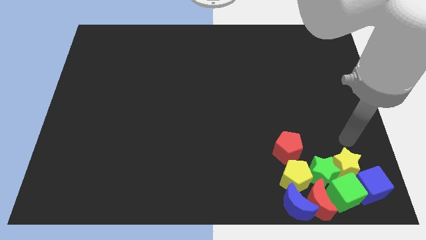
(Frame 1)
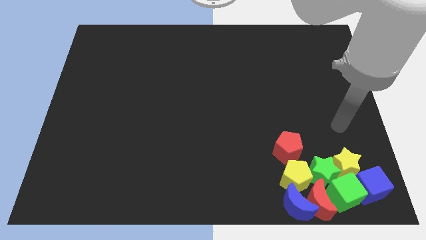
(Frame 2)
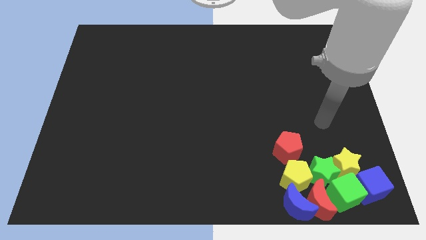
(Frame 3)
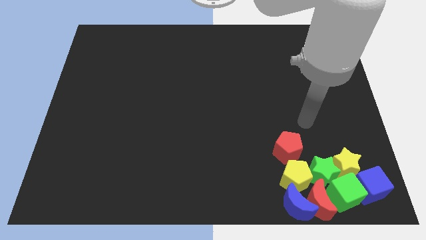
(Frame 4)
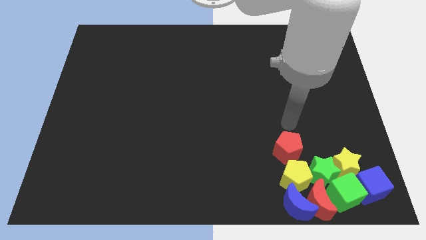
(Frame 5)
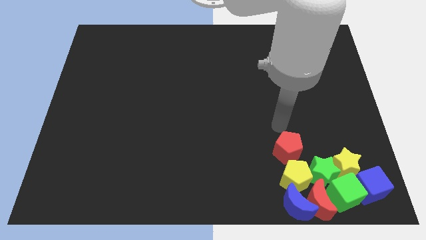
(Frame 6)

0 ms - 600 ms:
point your arm at the top of the red pentagon

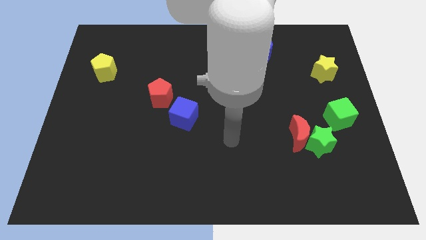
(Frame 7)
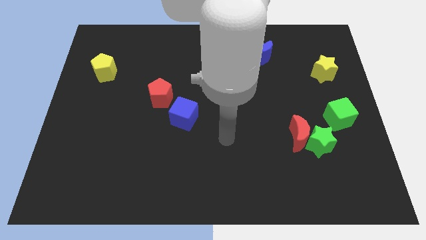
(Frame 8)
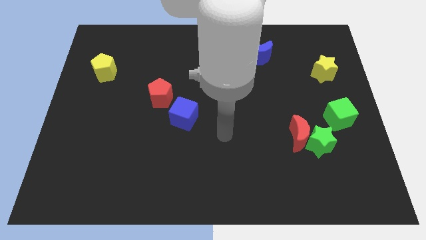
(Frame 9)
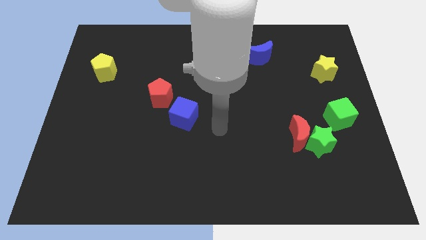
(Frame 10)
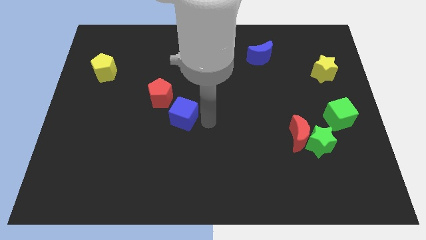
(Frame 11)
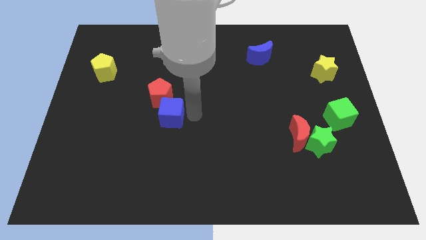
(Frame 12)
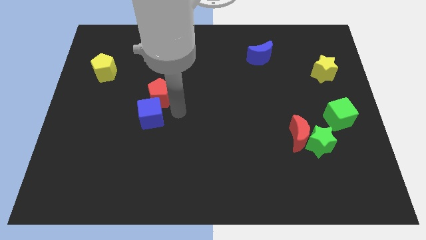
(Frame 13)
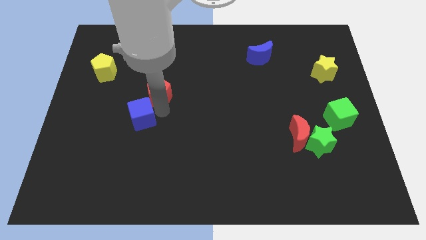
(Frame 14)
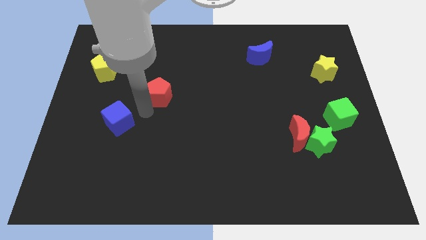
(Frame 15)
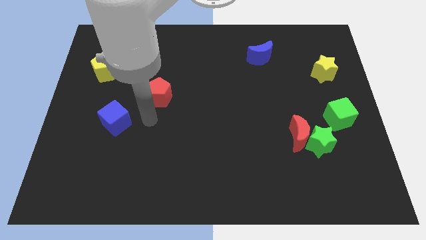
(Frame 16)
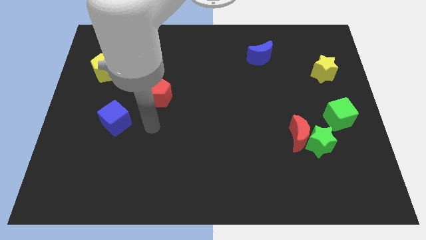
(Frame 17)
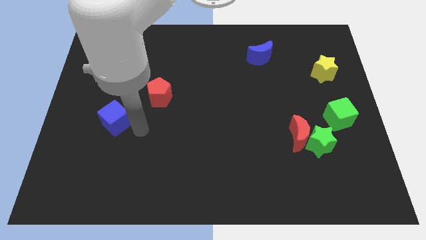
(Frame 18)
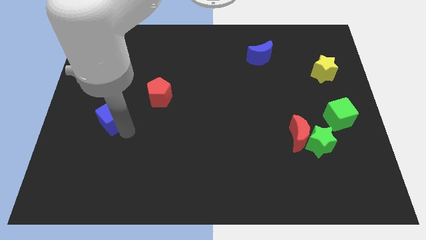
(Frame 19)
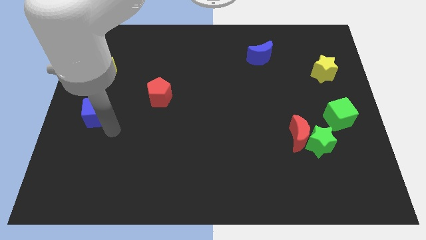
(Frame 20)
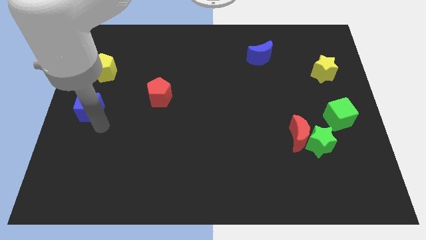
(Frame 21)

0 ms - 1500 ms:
put the blue cube vertically below the yellow pentagon

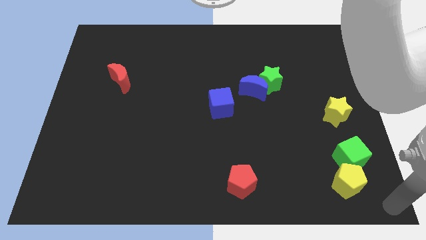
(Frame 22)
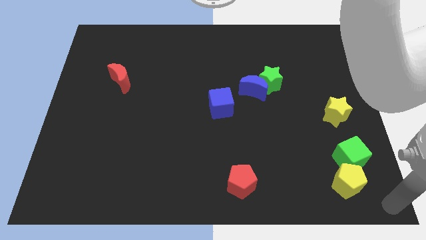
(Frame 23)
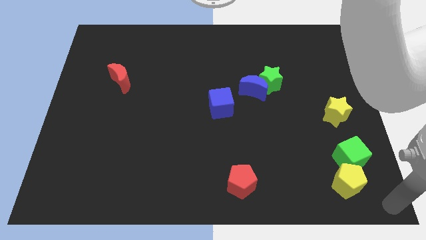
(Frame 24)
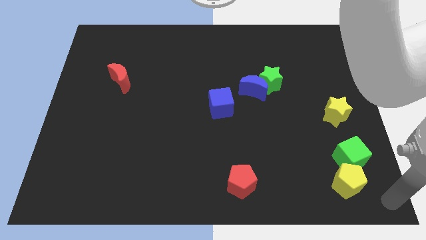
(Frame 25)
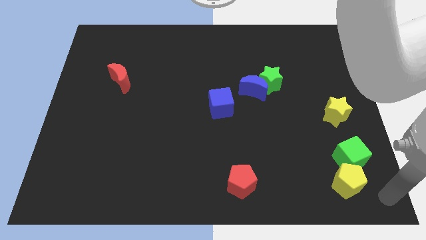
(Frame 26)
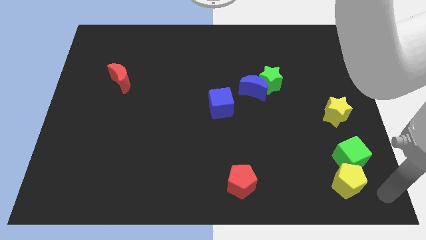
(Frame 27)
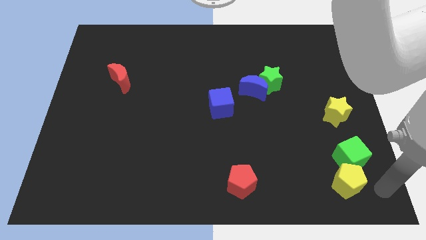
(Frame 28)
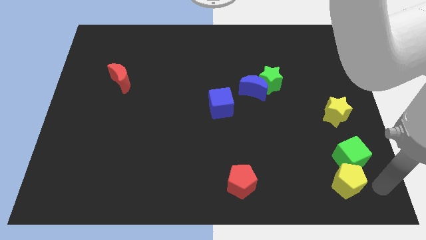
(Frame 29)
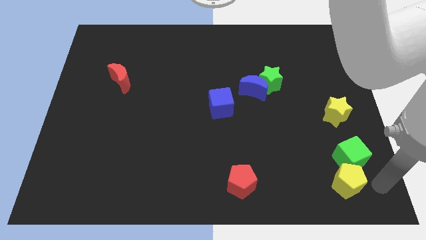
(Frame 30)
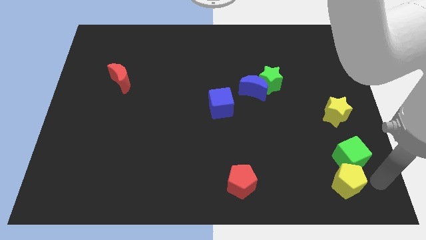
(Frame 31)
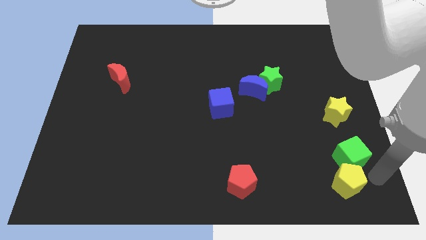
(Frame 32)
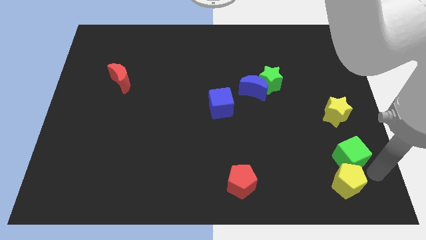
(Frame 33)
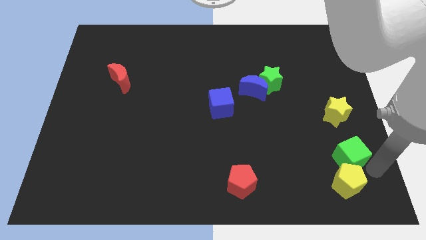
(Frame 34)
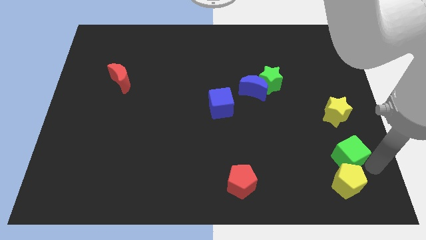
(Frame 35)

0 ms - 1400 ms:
place your arm to the bottom of green cube

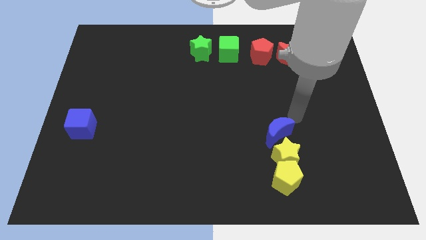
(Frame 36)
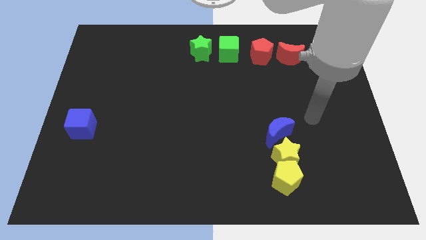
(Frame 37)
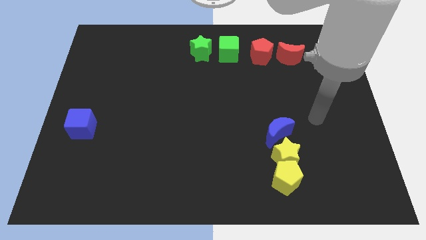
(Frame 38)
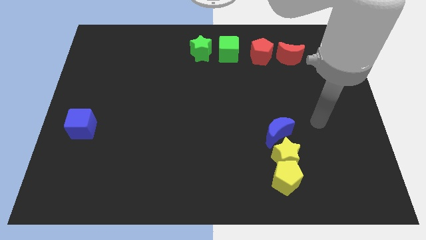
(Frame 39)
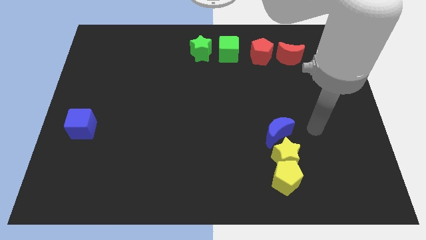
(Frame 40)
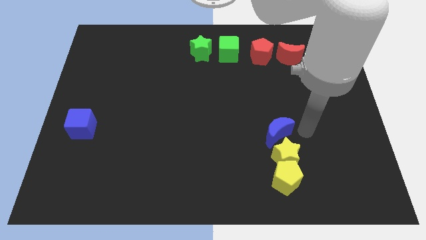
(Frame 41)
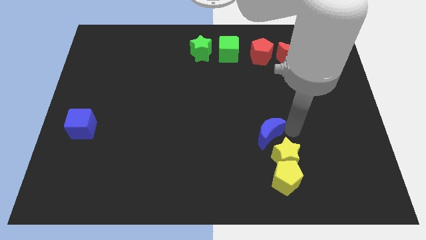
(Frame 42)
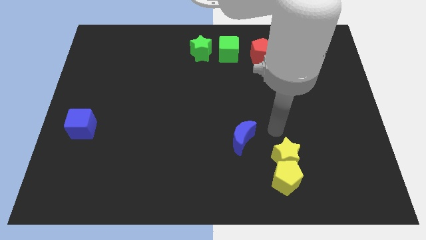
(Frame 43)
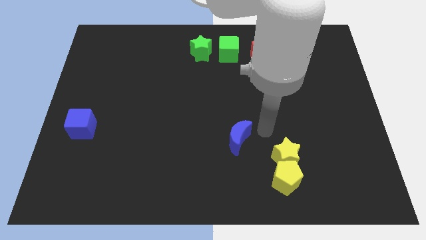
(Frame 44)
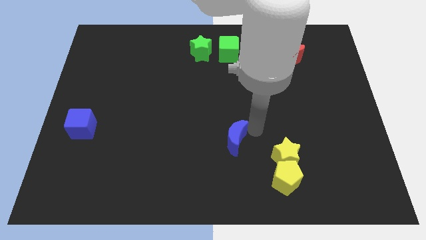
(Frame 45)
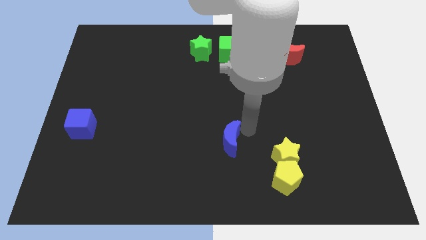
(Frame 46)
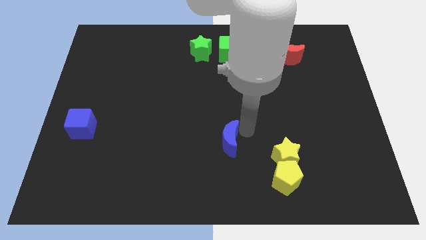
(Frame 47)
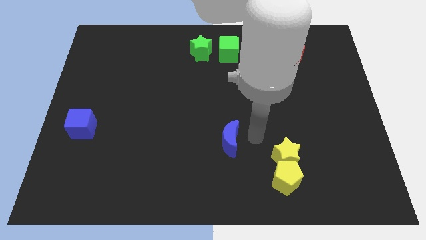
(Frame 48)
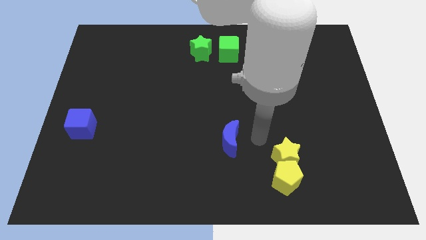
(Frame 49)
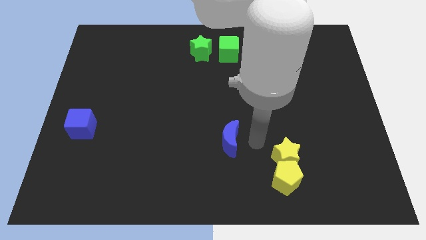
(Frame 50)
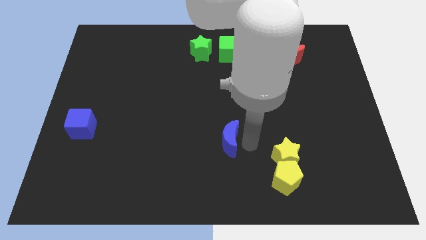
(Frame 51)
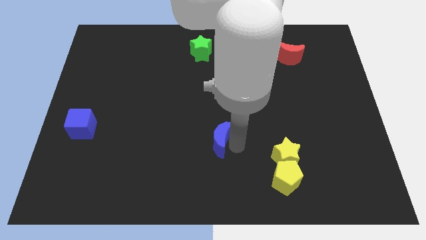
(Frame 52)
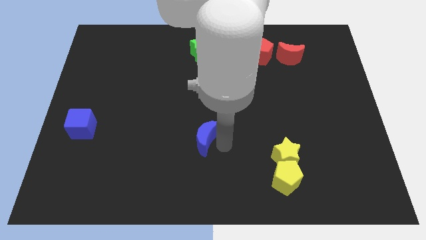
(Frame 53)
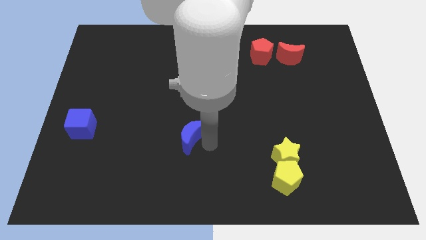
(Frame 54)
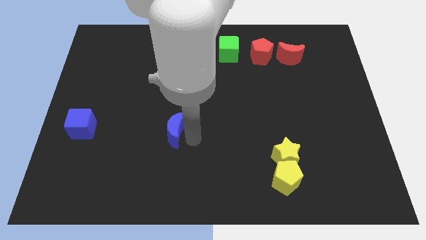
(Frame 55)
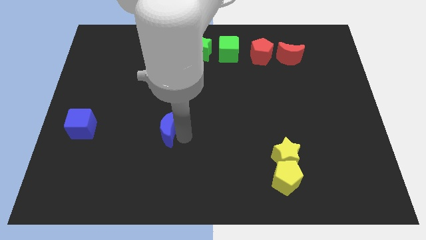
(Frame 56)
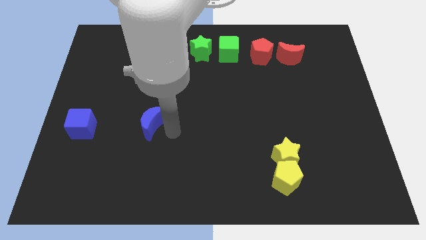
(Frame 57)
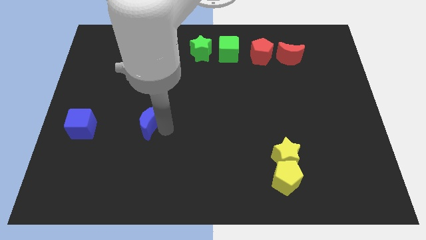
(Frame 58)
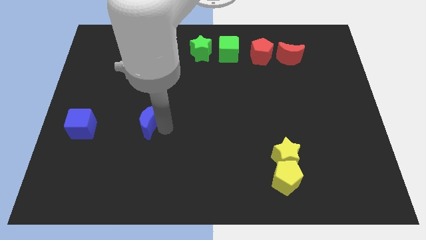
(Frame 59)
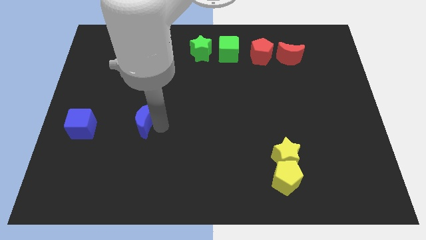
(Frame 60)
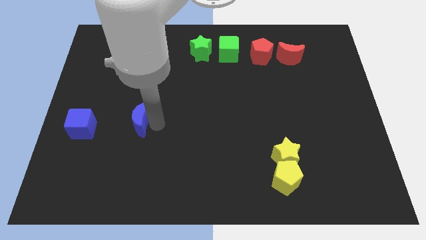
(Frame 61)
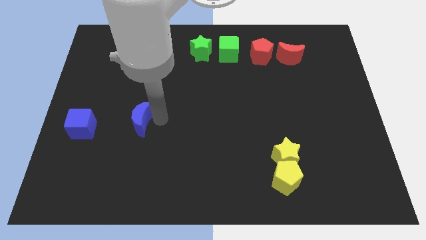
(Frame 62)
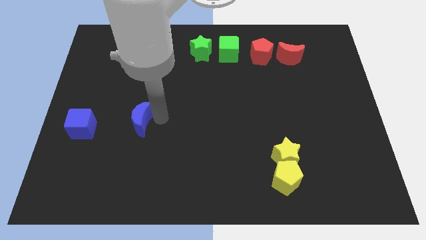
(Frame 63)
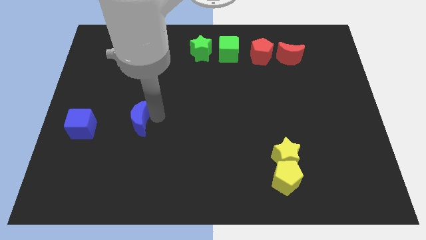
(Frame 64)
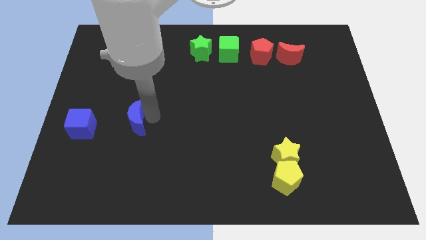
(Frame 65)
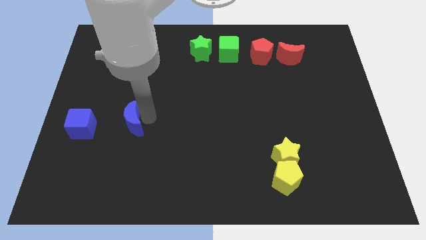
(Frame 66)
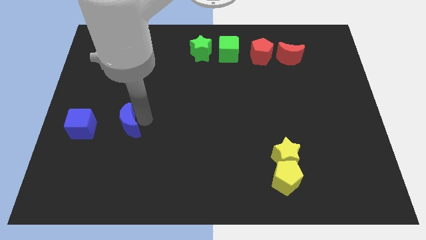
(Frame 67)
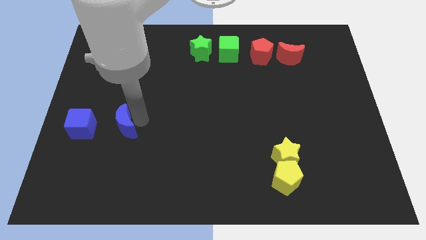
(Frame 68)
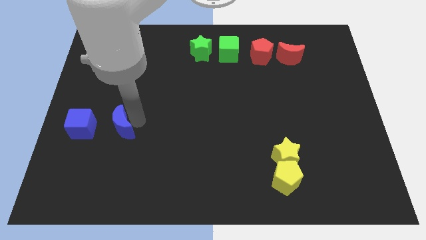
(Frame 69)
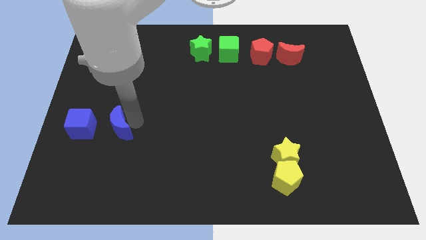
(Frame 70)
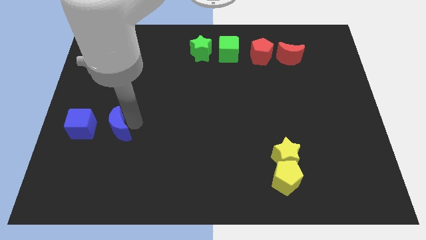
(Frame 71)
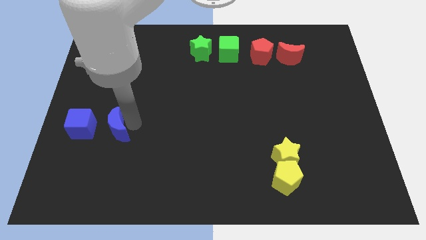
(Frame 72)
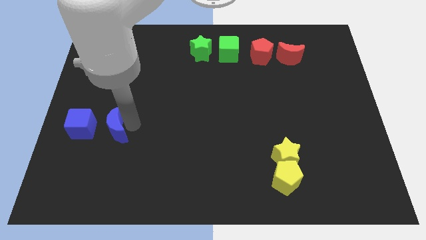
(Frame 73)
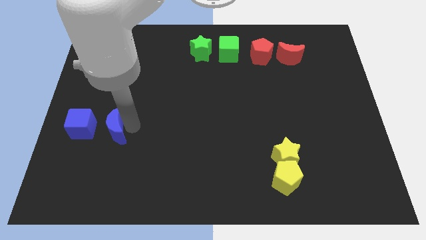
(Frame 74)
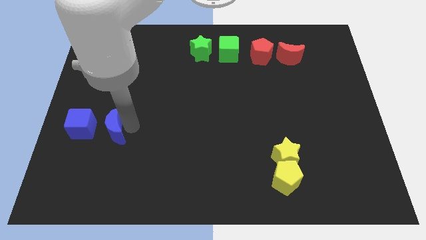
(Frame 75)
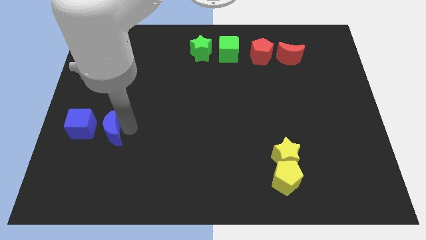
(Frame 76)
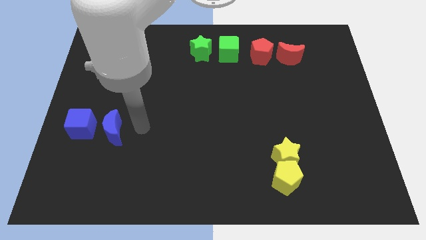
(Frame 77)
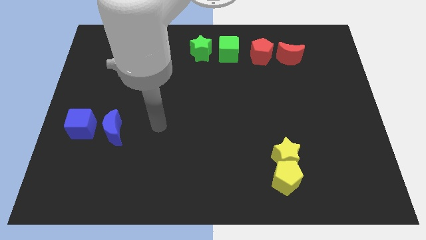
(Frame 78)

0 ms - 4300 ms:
push the blue moon to the right side of the blue cube

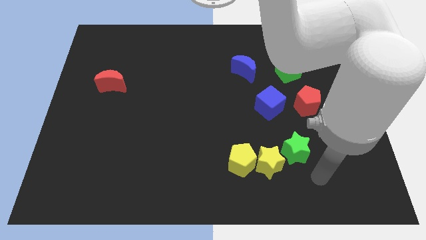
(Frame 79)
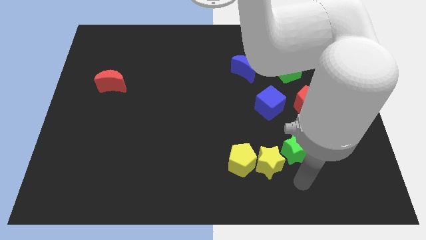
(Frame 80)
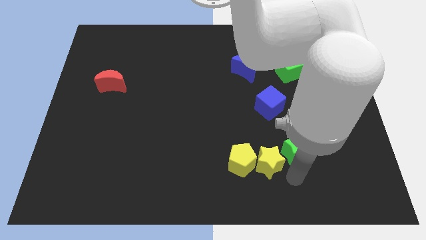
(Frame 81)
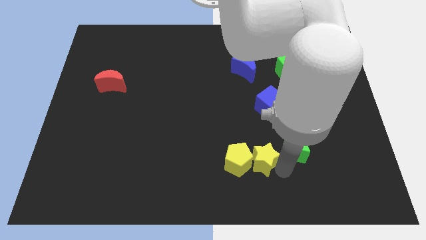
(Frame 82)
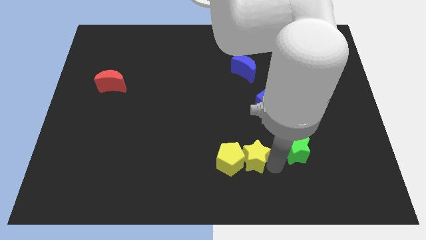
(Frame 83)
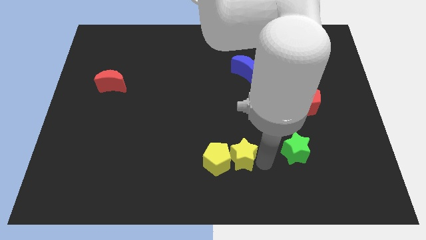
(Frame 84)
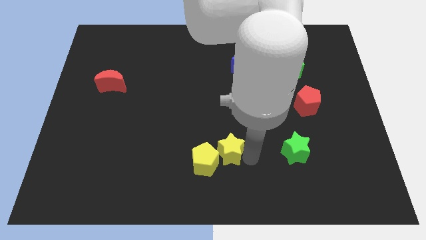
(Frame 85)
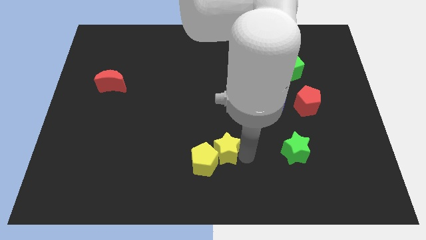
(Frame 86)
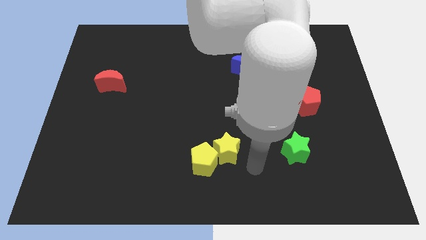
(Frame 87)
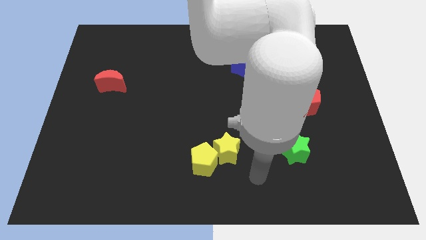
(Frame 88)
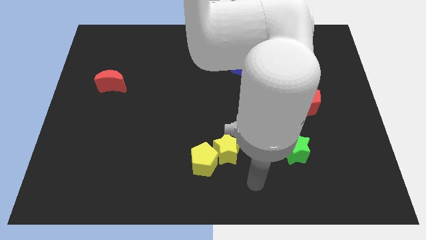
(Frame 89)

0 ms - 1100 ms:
separate yellow star from green star
